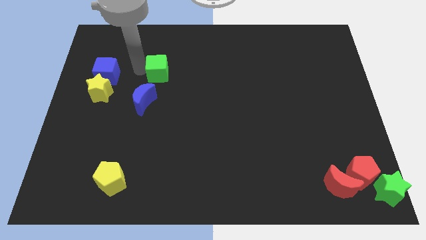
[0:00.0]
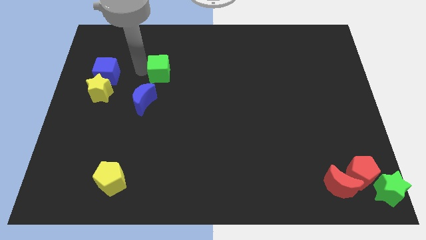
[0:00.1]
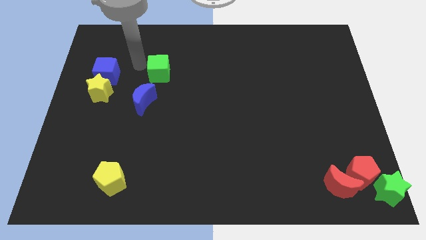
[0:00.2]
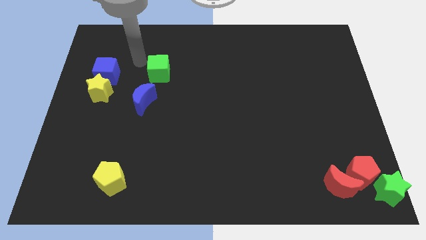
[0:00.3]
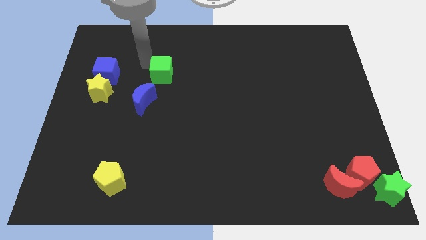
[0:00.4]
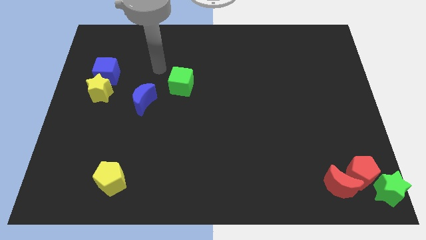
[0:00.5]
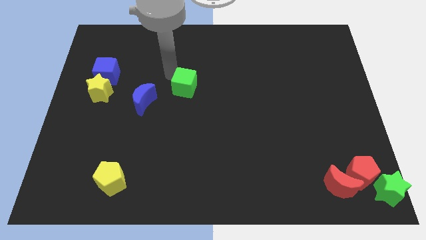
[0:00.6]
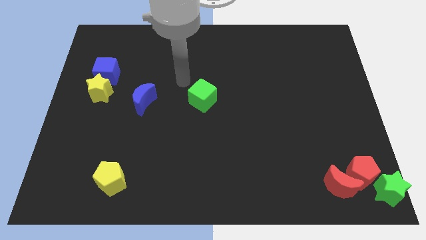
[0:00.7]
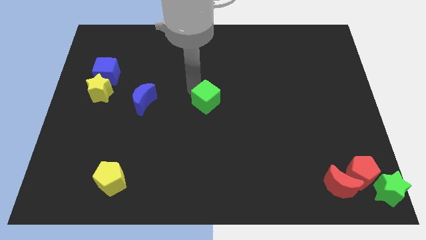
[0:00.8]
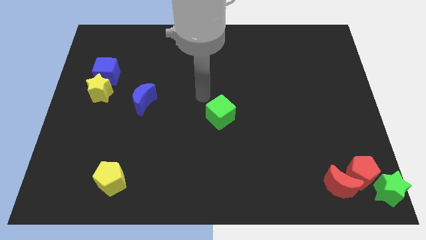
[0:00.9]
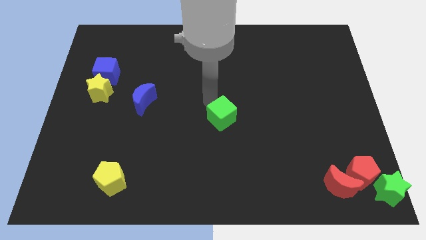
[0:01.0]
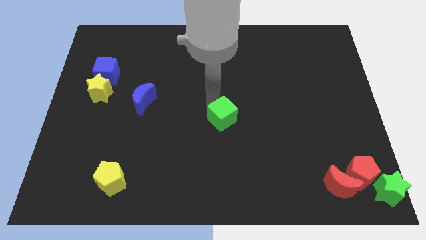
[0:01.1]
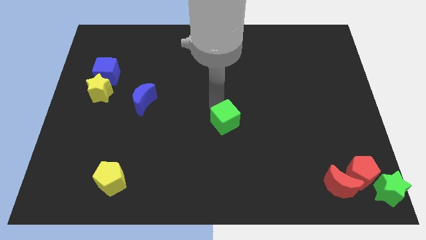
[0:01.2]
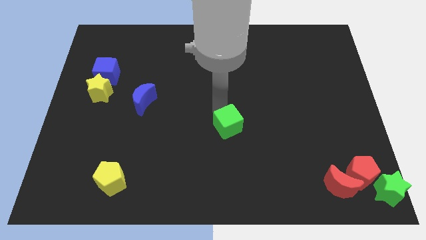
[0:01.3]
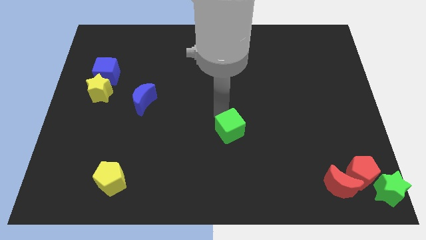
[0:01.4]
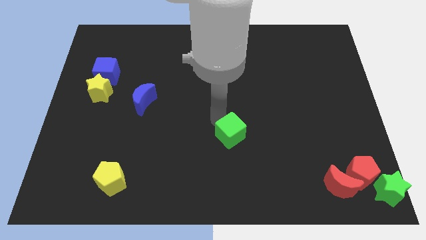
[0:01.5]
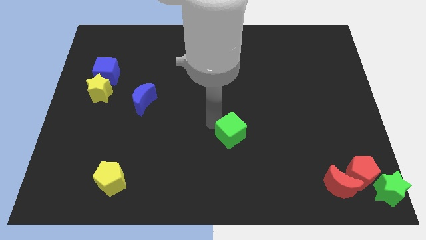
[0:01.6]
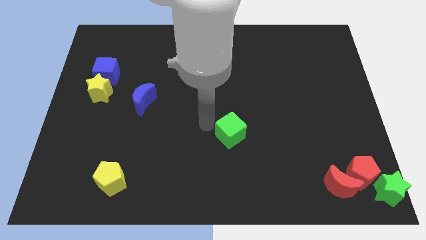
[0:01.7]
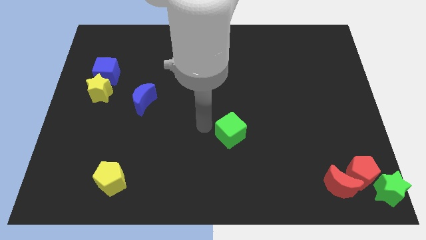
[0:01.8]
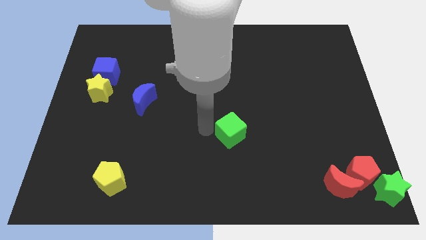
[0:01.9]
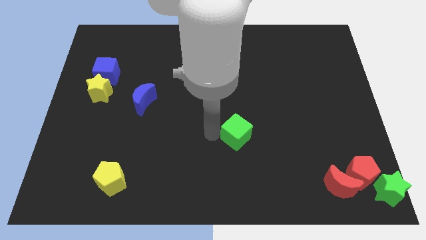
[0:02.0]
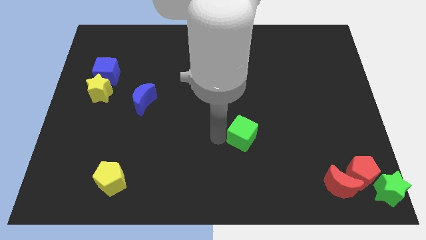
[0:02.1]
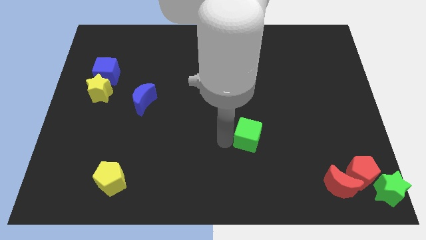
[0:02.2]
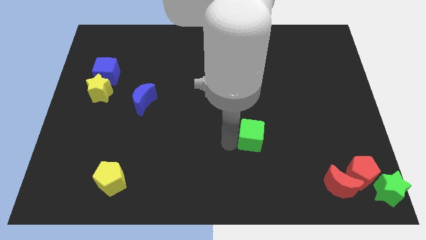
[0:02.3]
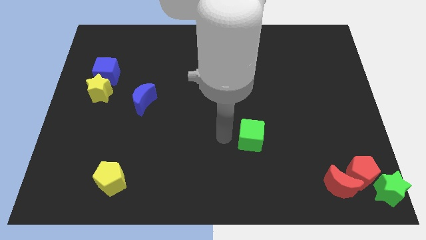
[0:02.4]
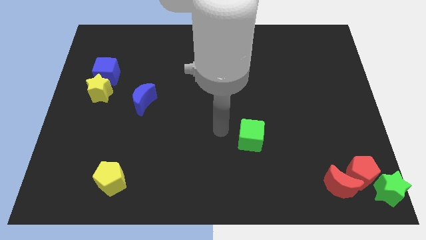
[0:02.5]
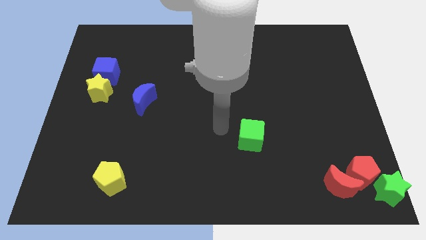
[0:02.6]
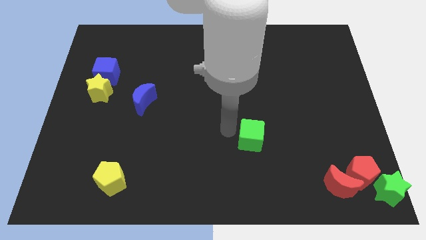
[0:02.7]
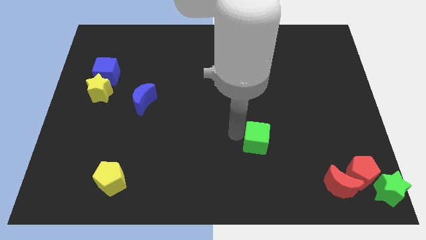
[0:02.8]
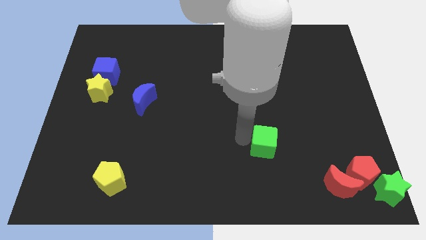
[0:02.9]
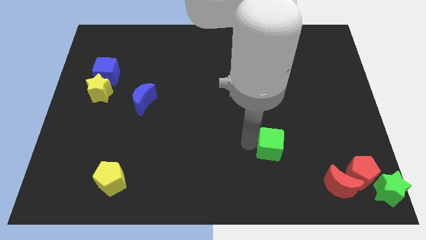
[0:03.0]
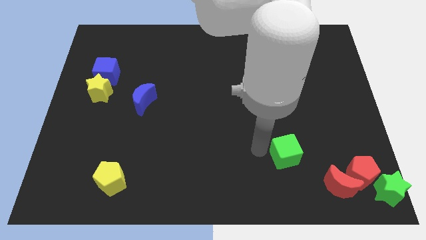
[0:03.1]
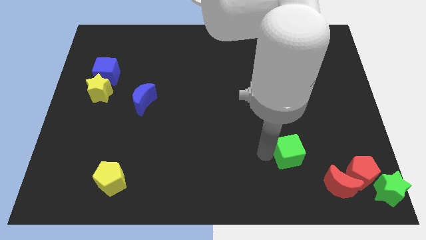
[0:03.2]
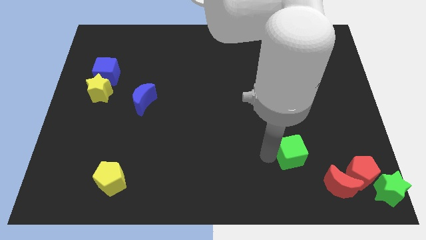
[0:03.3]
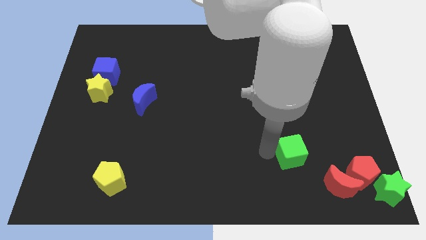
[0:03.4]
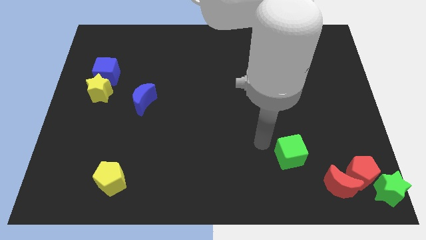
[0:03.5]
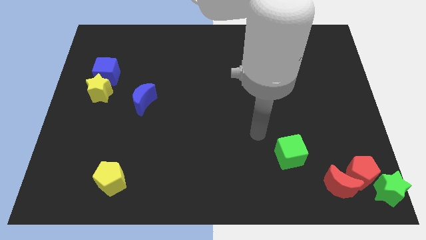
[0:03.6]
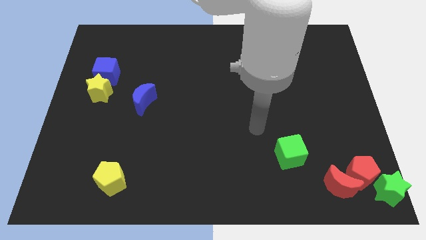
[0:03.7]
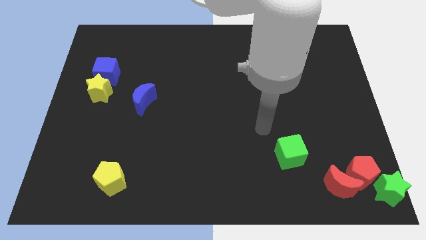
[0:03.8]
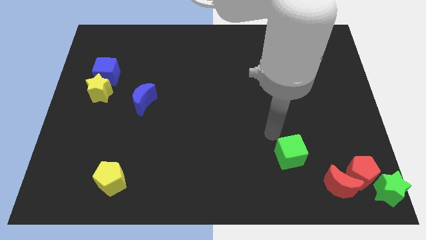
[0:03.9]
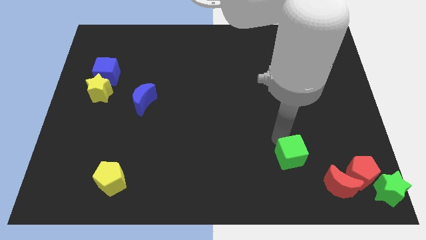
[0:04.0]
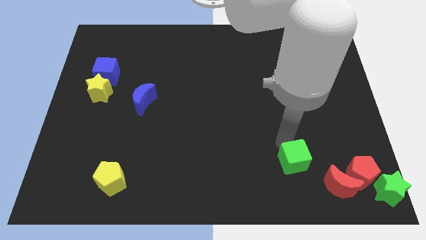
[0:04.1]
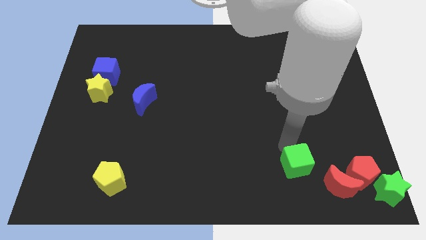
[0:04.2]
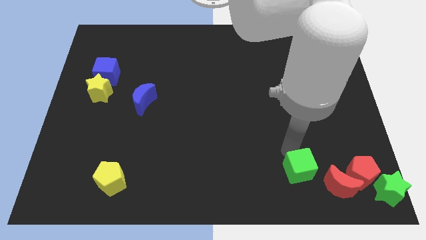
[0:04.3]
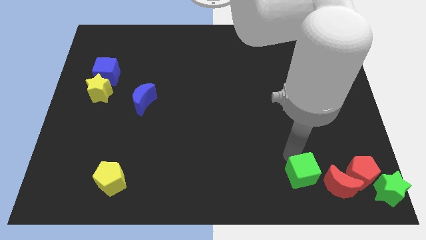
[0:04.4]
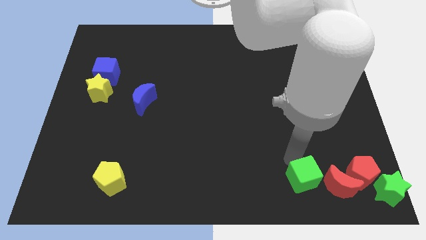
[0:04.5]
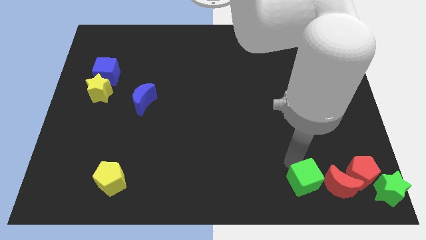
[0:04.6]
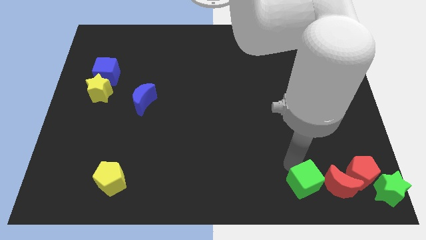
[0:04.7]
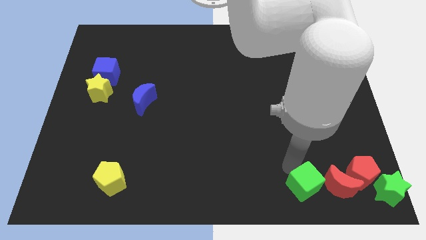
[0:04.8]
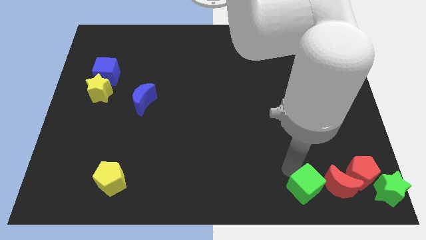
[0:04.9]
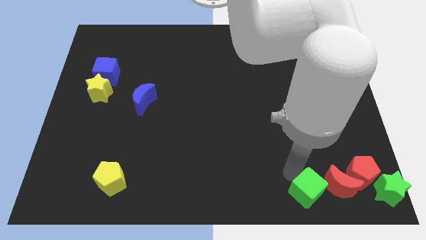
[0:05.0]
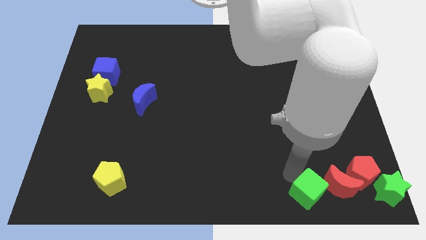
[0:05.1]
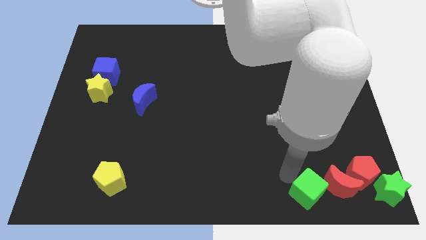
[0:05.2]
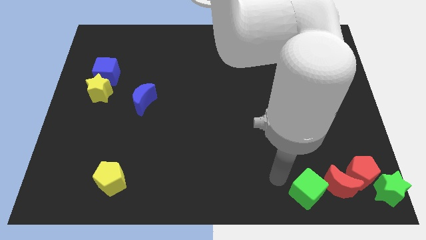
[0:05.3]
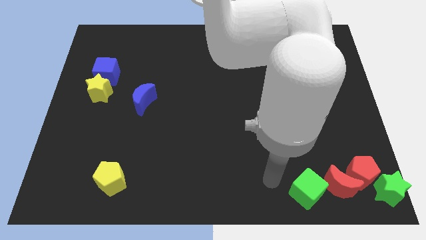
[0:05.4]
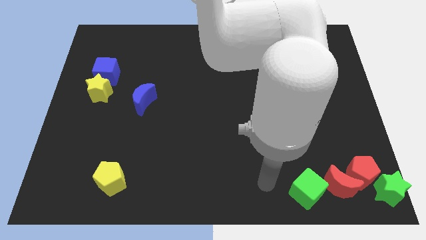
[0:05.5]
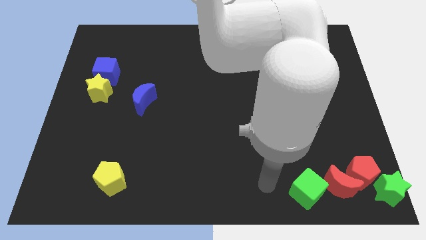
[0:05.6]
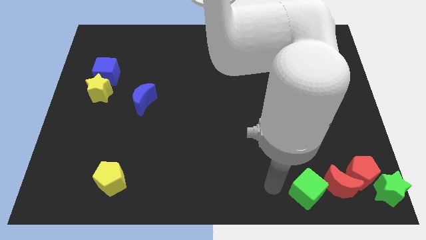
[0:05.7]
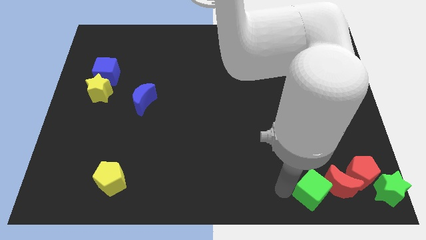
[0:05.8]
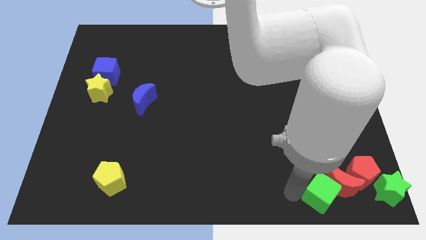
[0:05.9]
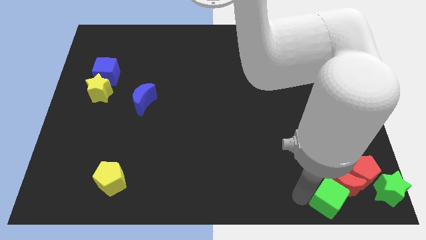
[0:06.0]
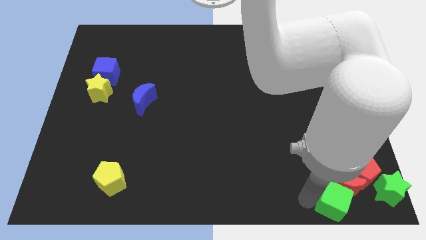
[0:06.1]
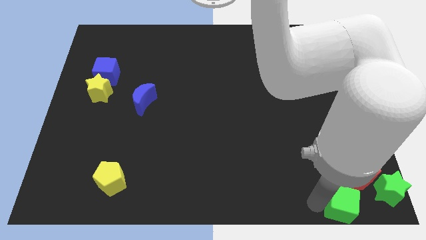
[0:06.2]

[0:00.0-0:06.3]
push the green cube into the red crescent

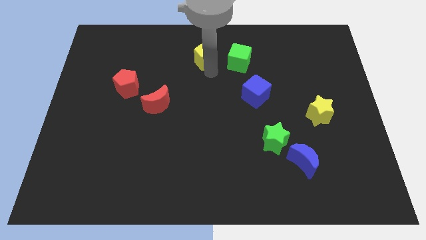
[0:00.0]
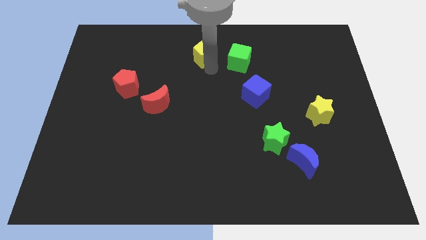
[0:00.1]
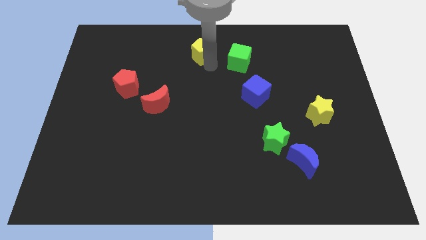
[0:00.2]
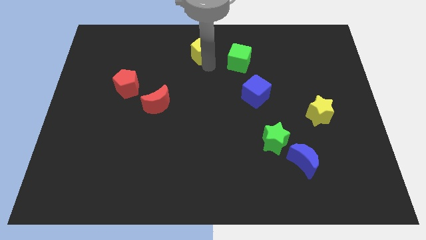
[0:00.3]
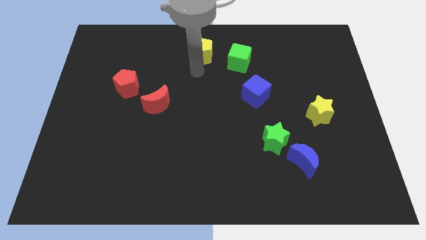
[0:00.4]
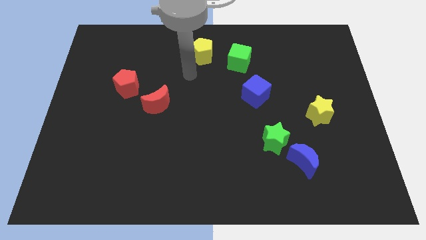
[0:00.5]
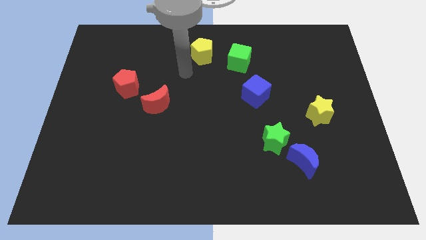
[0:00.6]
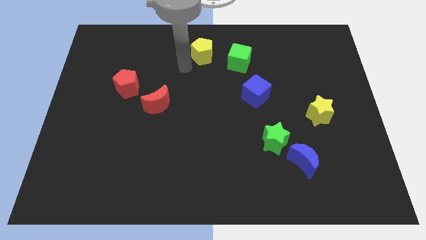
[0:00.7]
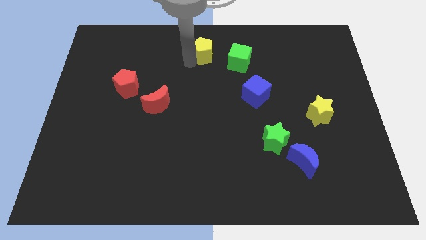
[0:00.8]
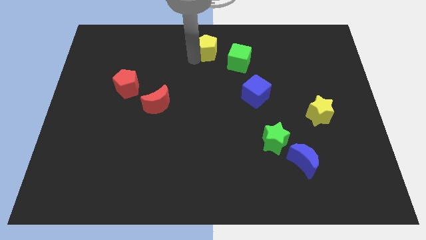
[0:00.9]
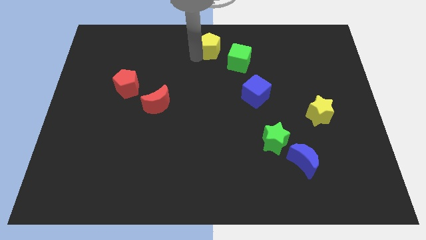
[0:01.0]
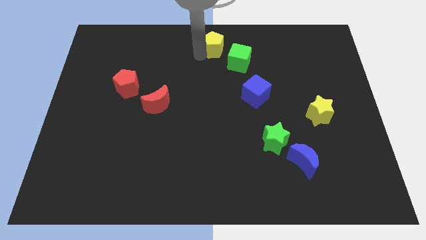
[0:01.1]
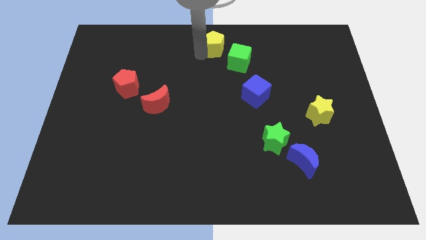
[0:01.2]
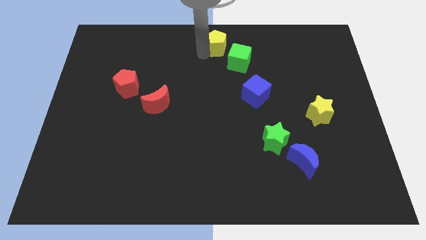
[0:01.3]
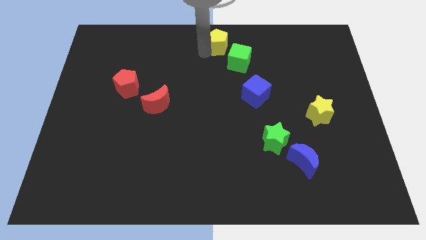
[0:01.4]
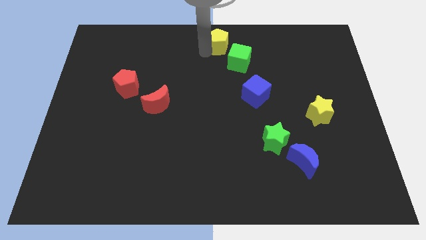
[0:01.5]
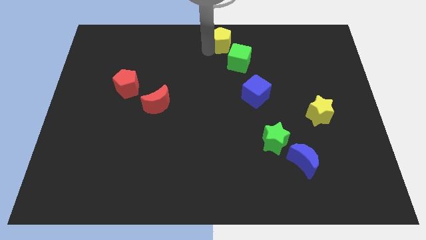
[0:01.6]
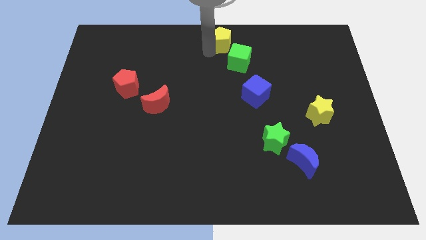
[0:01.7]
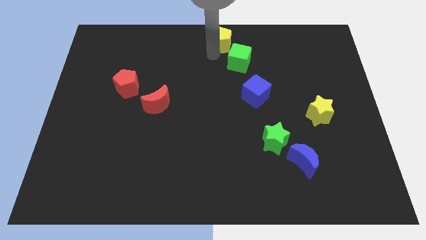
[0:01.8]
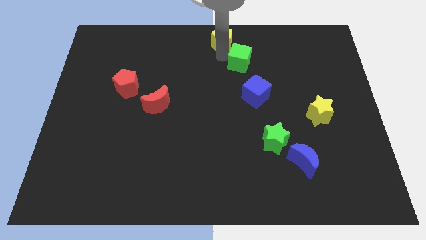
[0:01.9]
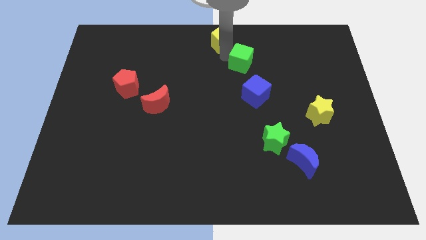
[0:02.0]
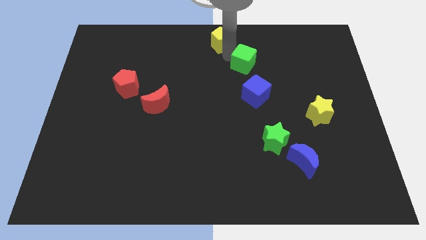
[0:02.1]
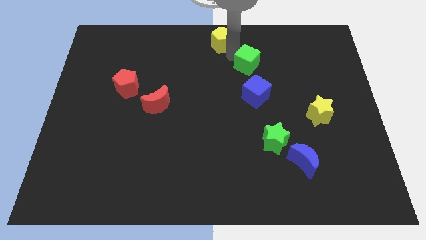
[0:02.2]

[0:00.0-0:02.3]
push the yellow pentagon to the top left of the green cube

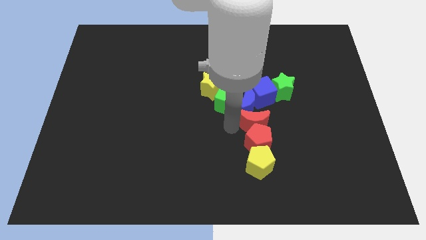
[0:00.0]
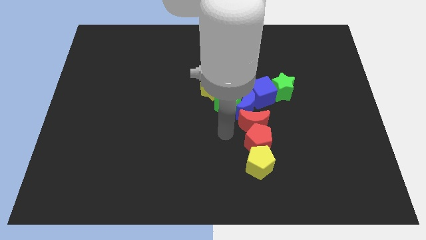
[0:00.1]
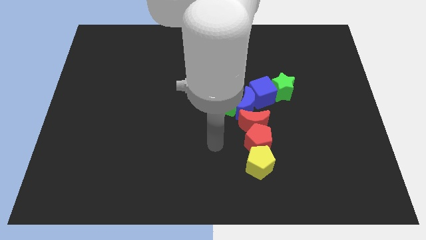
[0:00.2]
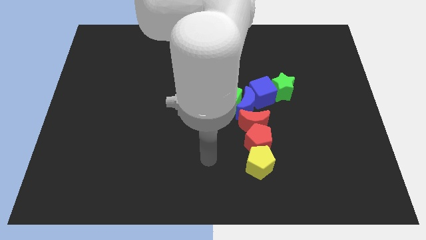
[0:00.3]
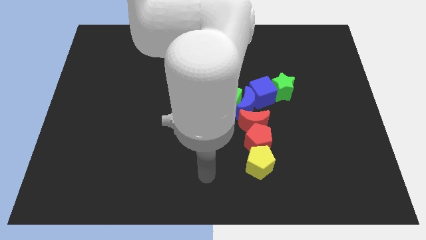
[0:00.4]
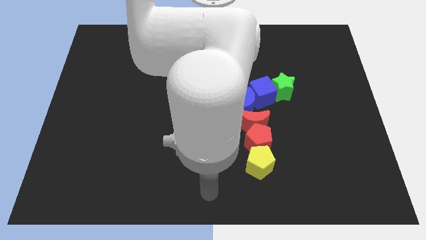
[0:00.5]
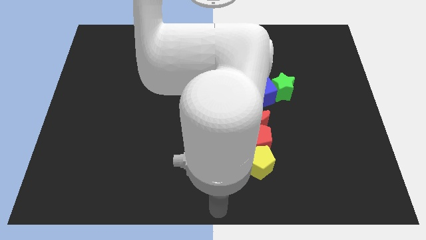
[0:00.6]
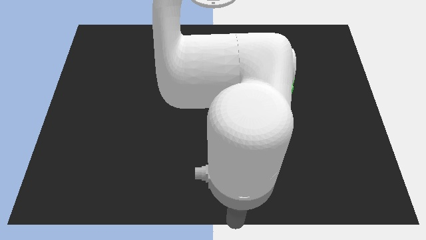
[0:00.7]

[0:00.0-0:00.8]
move the arm away from the red moon
